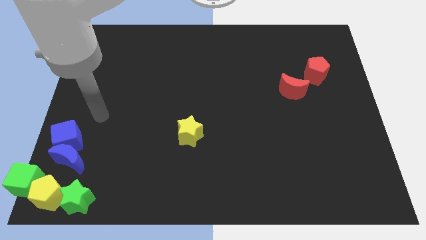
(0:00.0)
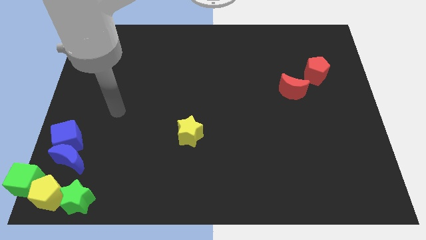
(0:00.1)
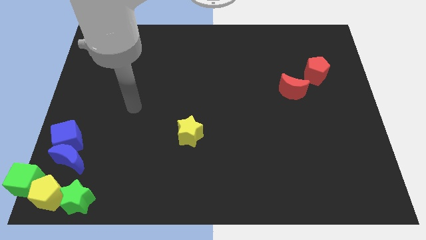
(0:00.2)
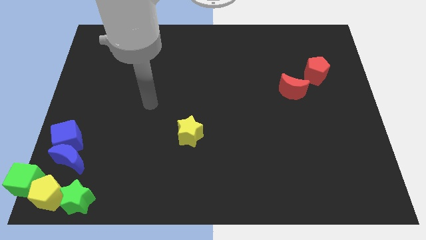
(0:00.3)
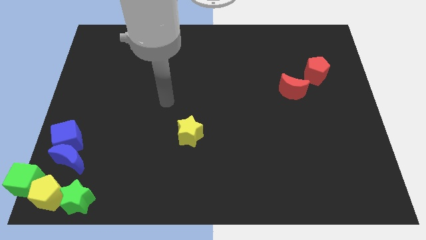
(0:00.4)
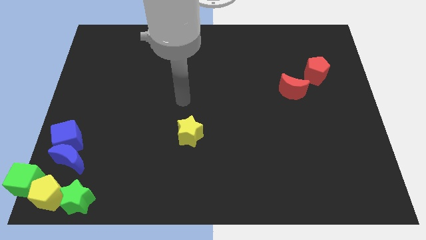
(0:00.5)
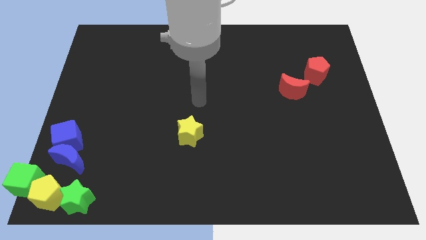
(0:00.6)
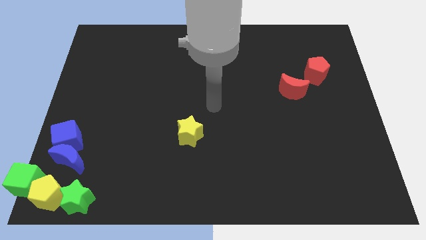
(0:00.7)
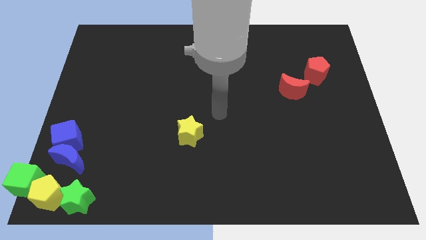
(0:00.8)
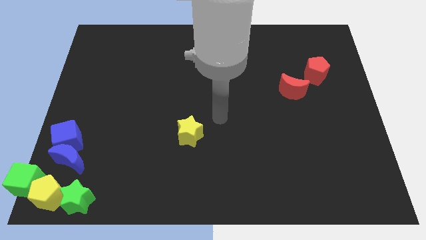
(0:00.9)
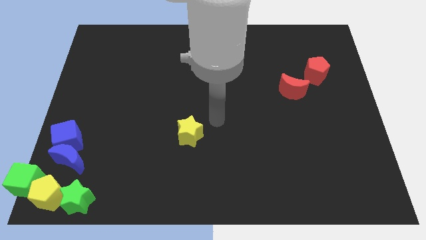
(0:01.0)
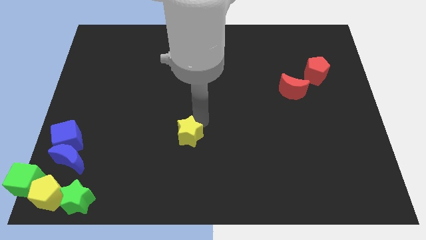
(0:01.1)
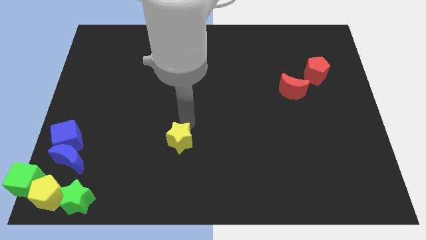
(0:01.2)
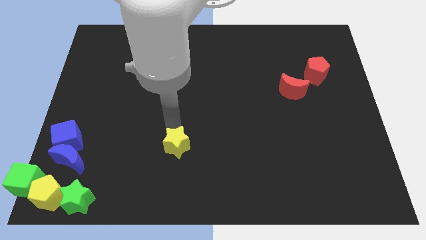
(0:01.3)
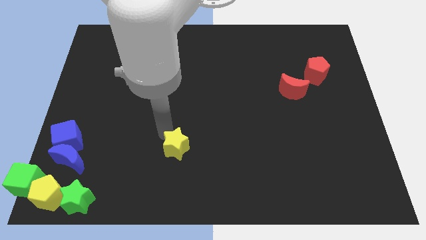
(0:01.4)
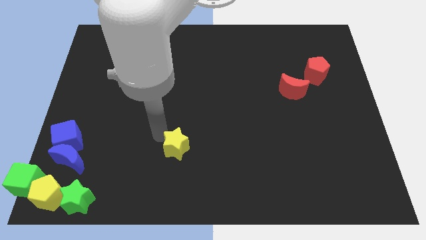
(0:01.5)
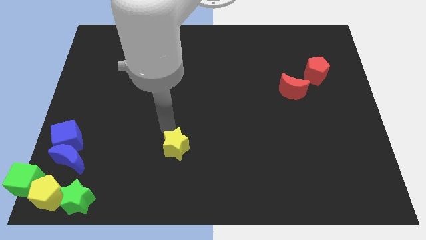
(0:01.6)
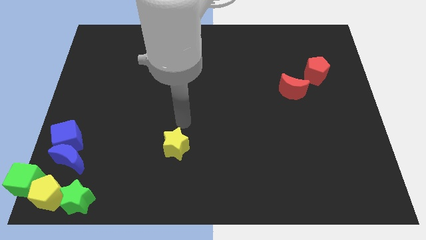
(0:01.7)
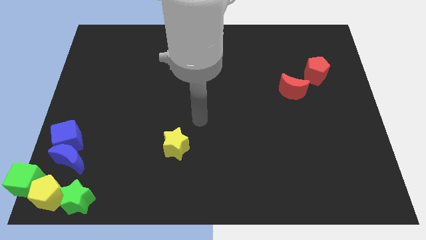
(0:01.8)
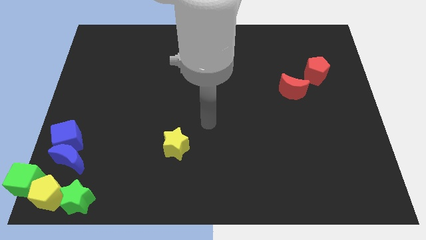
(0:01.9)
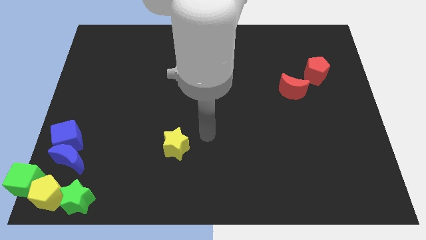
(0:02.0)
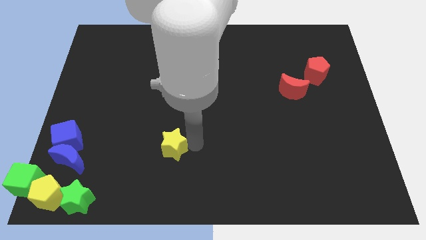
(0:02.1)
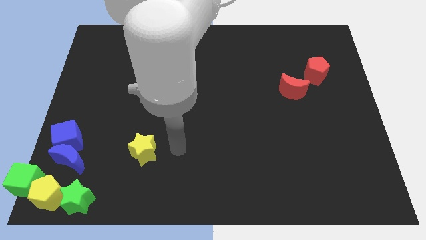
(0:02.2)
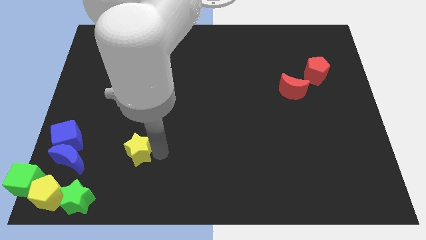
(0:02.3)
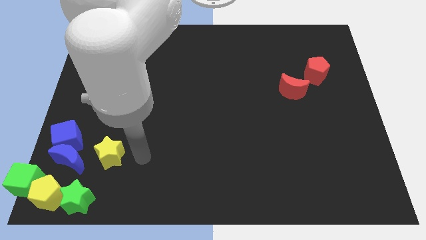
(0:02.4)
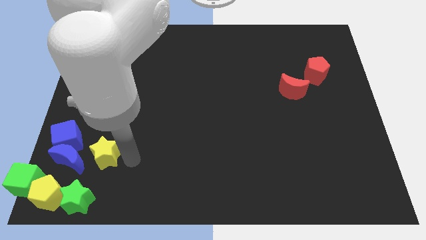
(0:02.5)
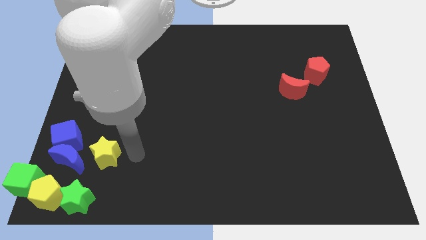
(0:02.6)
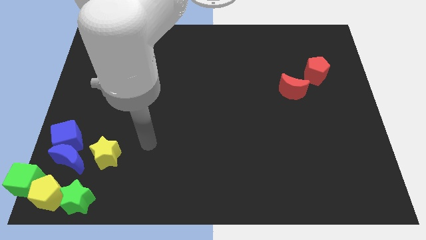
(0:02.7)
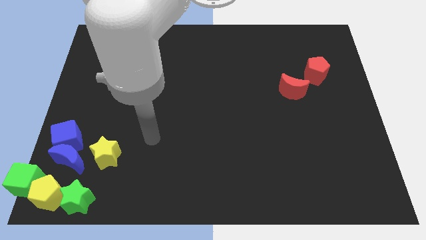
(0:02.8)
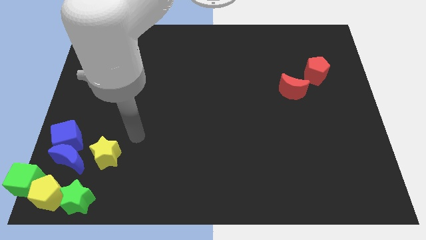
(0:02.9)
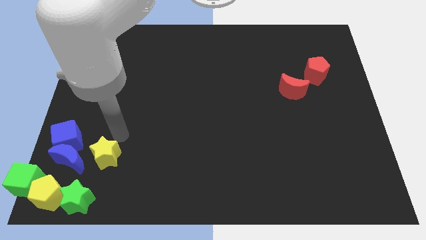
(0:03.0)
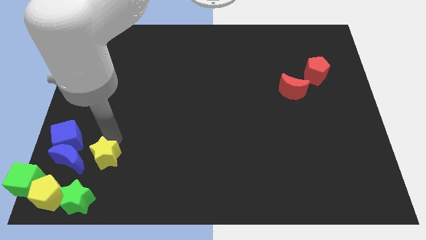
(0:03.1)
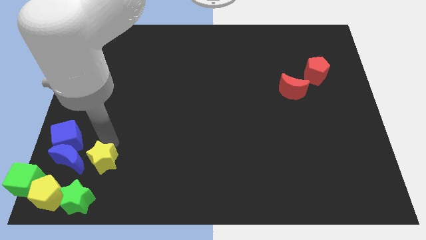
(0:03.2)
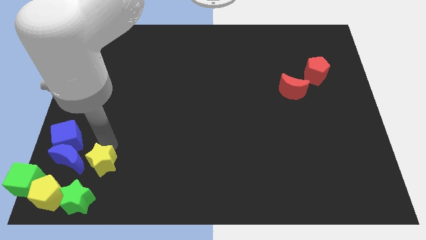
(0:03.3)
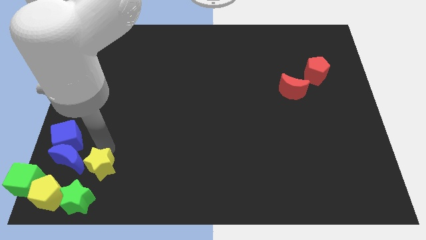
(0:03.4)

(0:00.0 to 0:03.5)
move the yellow star to the right side of the blue crescent

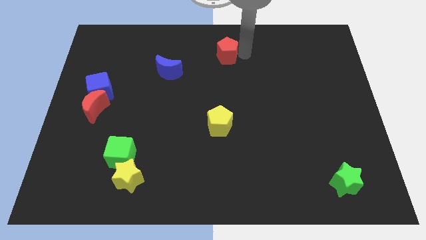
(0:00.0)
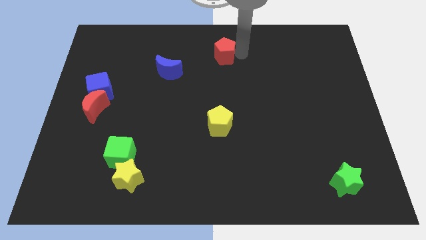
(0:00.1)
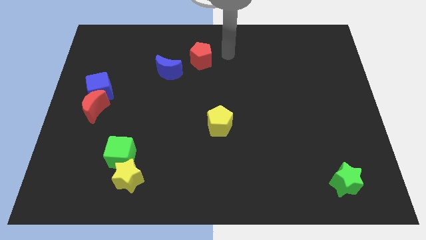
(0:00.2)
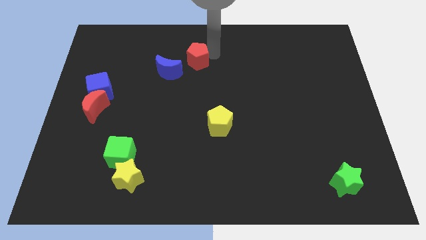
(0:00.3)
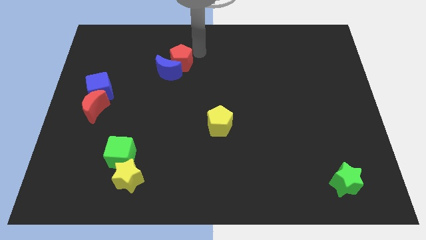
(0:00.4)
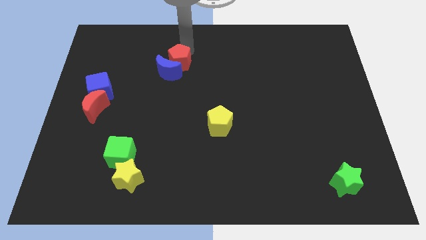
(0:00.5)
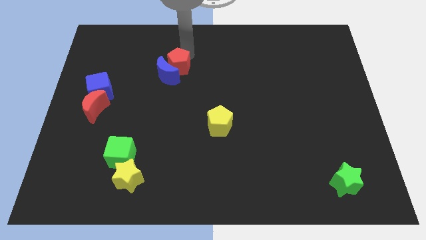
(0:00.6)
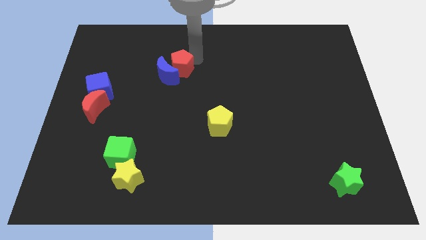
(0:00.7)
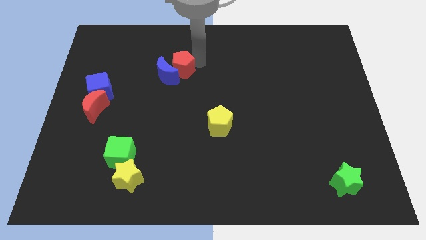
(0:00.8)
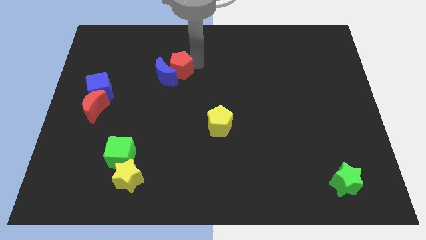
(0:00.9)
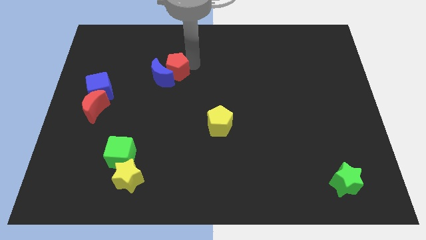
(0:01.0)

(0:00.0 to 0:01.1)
drag the red pentagon into blue moon

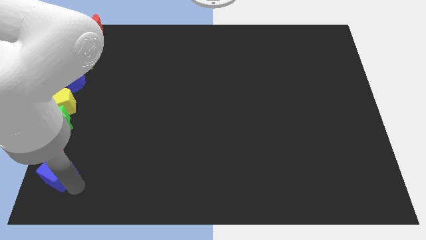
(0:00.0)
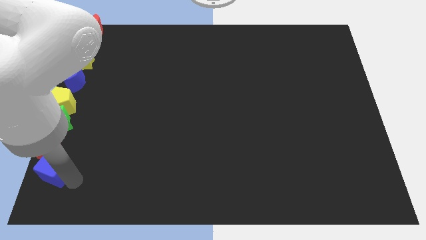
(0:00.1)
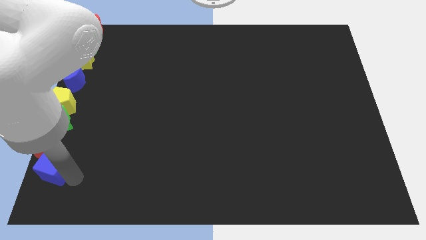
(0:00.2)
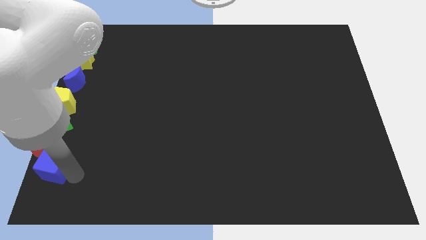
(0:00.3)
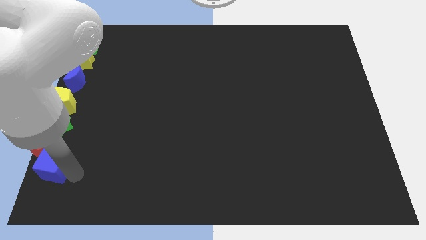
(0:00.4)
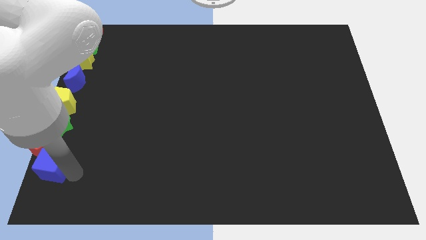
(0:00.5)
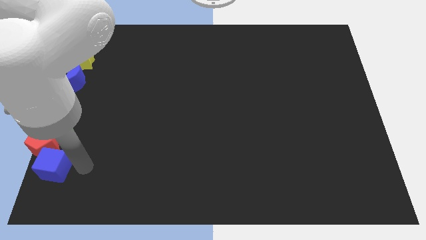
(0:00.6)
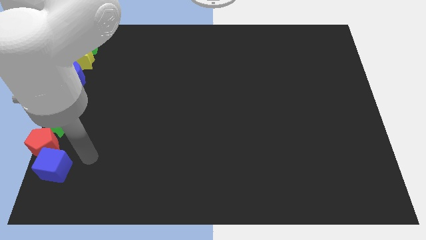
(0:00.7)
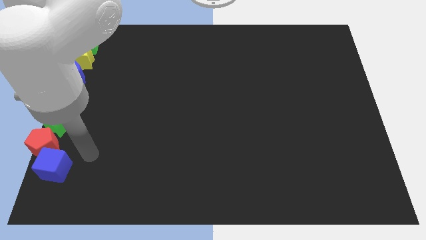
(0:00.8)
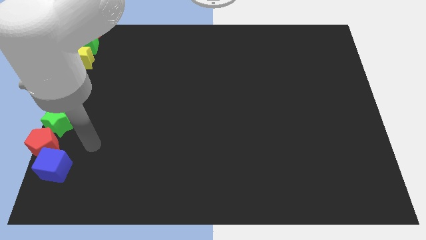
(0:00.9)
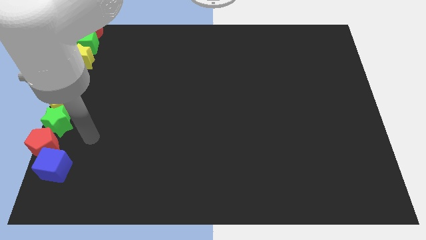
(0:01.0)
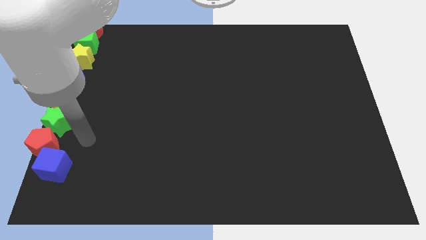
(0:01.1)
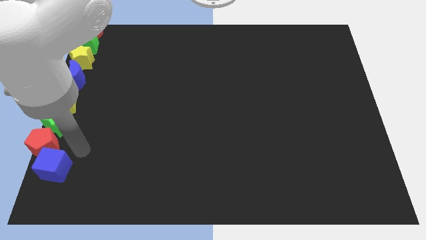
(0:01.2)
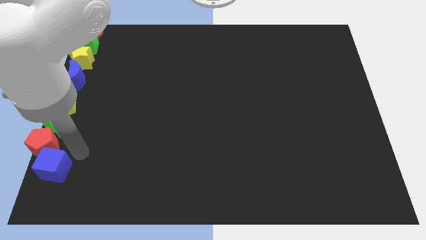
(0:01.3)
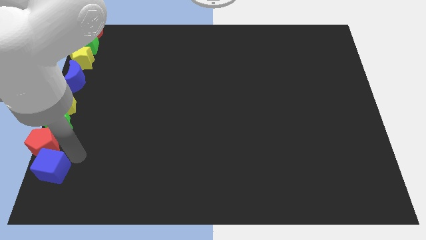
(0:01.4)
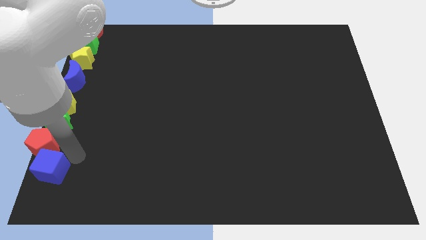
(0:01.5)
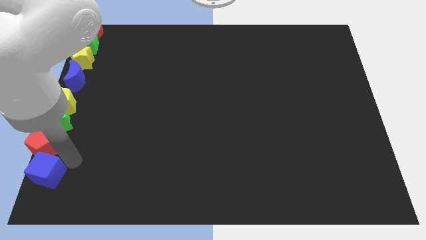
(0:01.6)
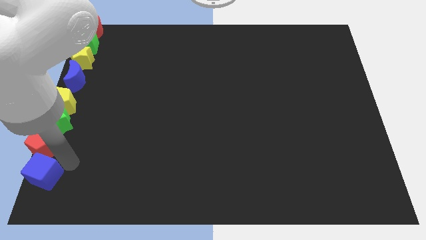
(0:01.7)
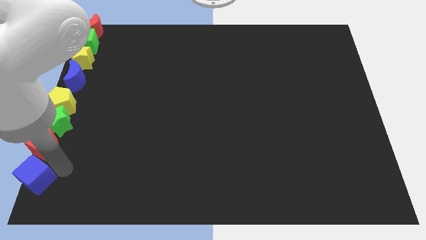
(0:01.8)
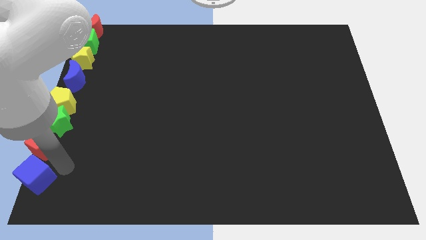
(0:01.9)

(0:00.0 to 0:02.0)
place the blue cube at the bottom of the red pentagon

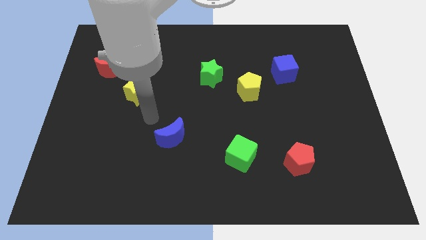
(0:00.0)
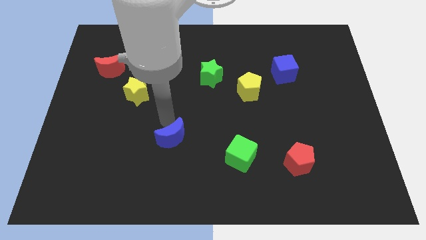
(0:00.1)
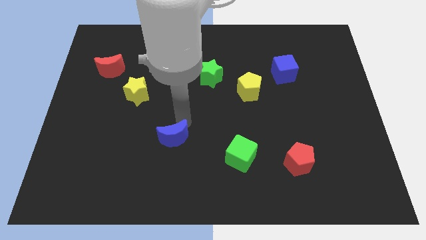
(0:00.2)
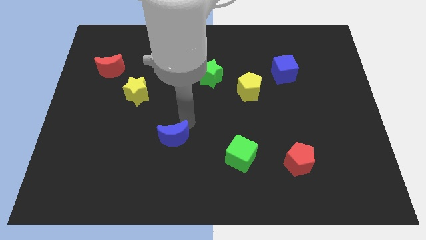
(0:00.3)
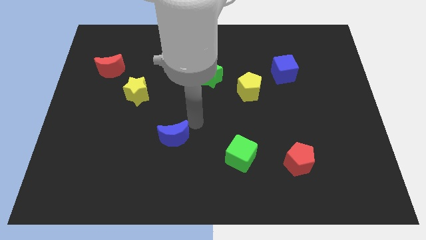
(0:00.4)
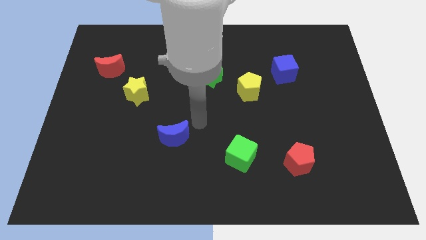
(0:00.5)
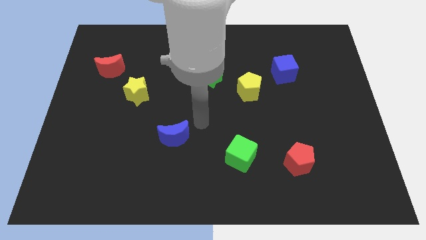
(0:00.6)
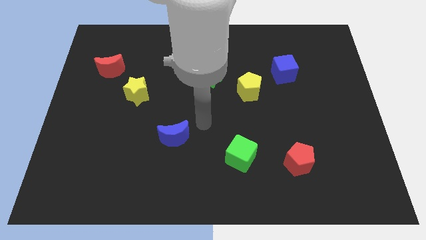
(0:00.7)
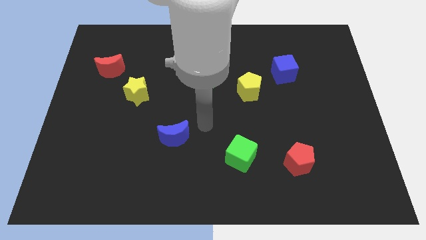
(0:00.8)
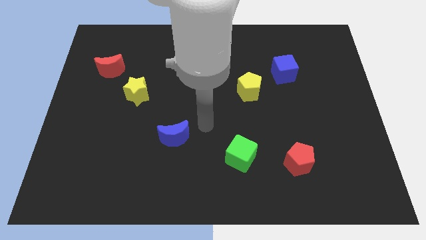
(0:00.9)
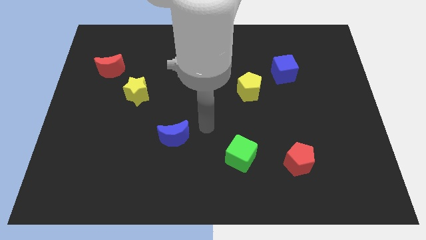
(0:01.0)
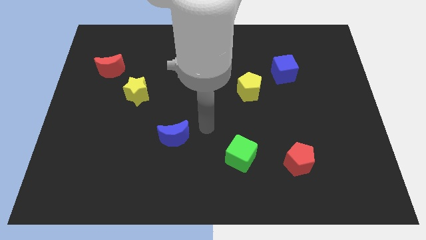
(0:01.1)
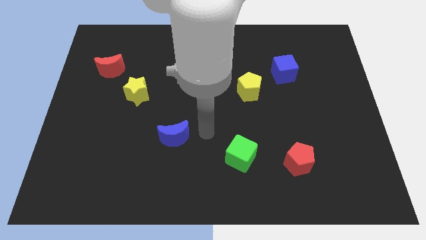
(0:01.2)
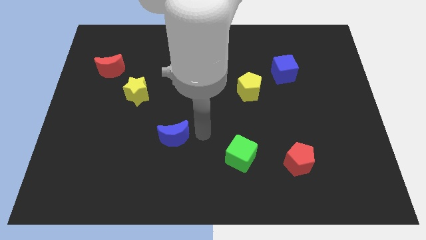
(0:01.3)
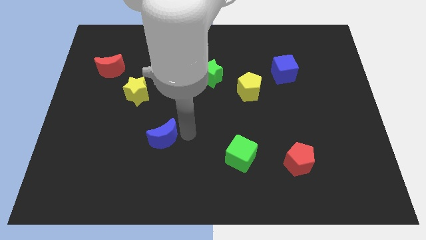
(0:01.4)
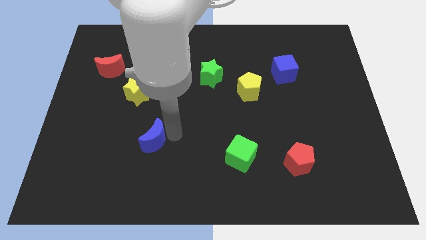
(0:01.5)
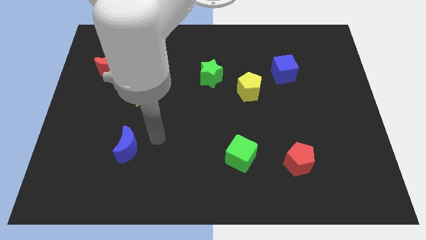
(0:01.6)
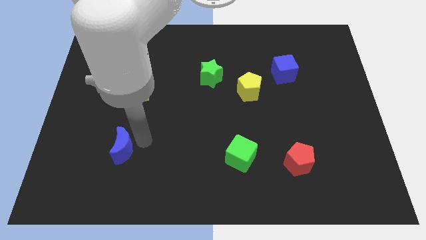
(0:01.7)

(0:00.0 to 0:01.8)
place the blue crescent to bottom of the yellow star

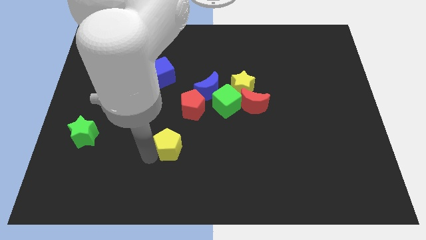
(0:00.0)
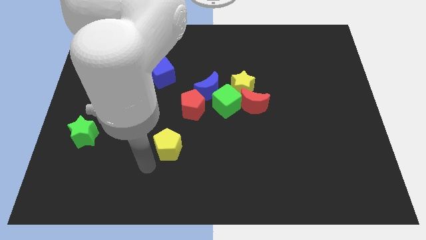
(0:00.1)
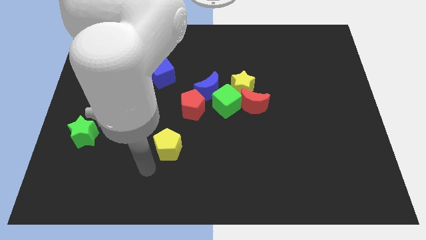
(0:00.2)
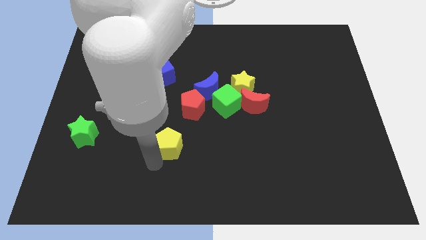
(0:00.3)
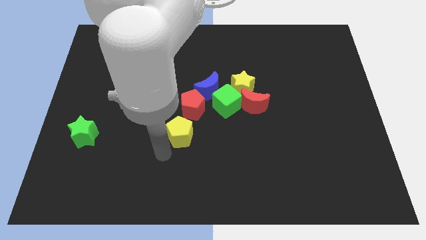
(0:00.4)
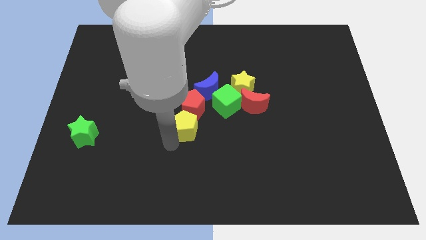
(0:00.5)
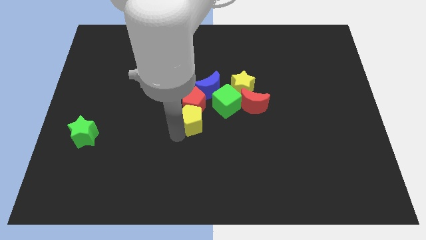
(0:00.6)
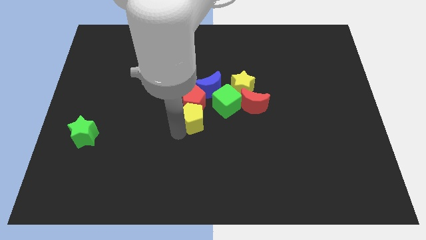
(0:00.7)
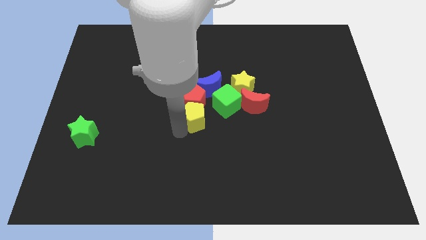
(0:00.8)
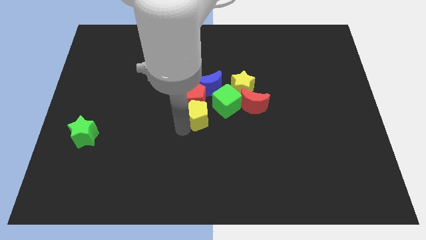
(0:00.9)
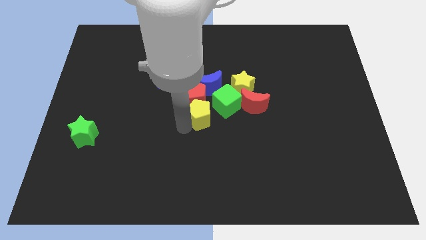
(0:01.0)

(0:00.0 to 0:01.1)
push the yellow pentagon closer to the red pentagon
